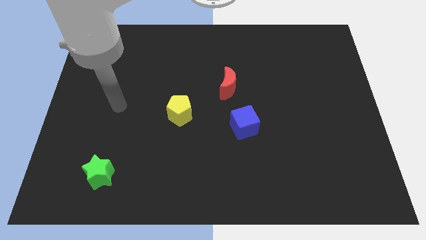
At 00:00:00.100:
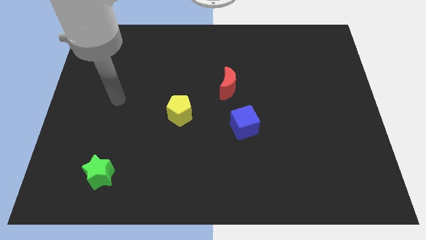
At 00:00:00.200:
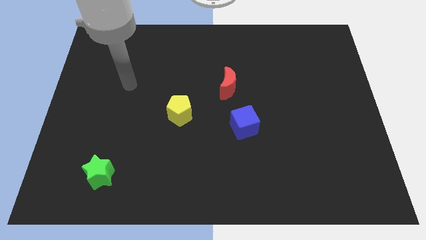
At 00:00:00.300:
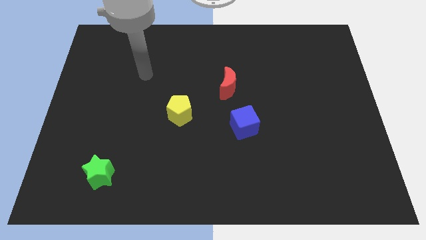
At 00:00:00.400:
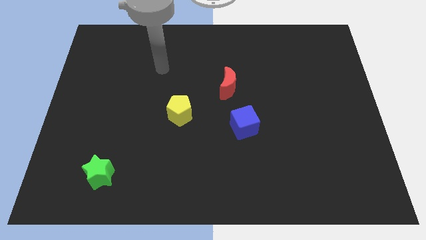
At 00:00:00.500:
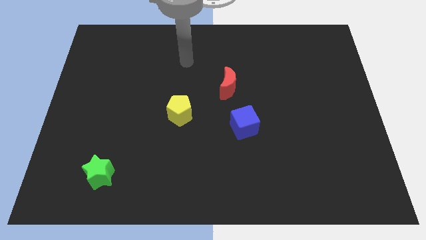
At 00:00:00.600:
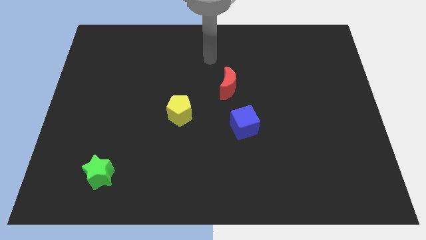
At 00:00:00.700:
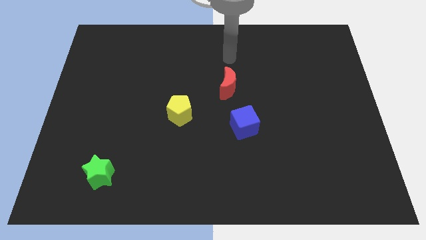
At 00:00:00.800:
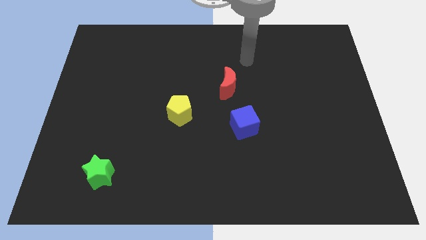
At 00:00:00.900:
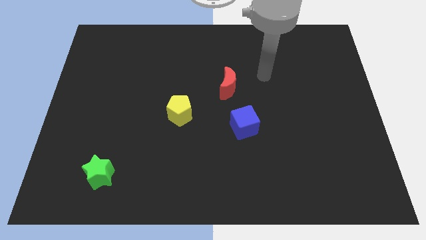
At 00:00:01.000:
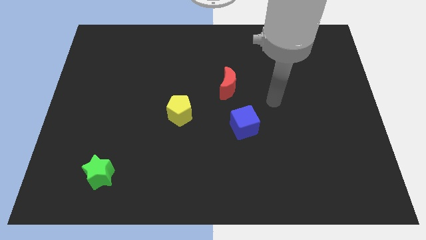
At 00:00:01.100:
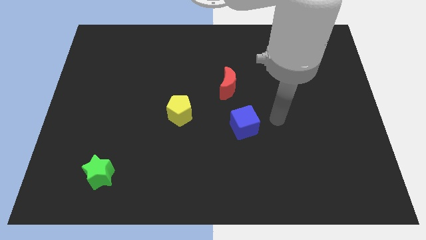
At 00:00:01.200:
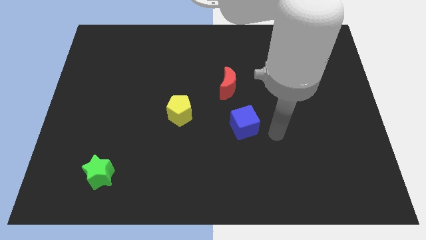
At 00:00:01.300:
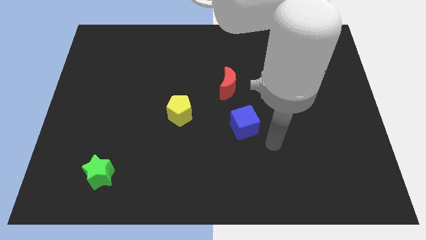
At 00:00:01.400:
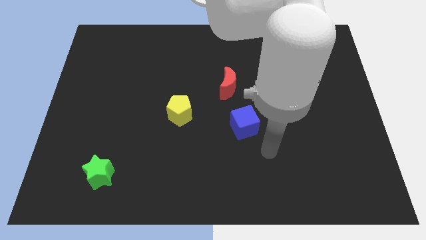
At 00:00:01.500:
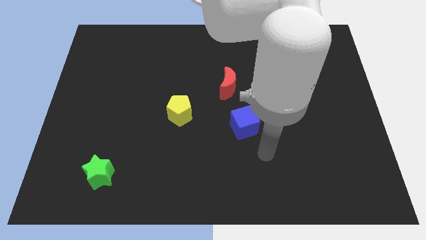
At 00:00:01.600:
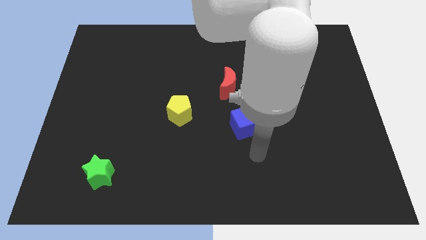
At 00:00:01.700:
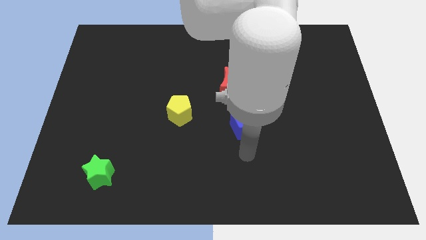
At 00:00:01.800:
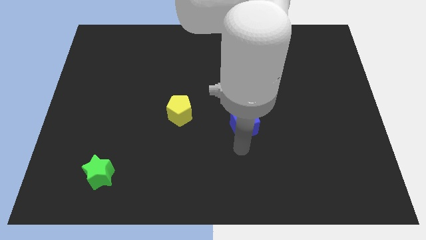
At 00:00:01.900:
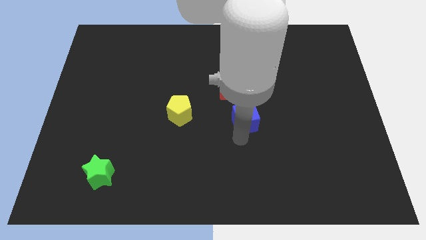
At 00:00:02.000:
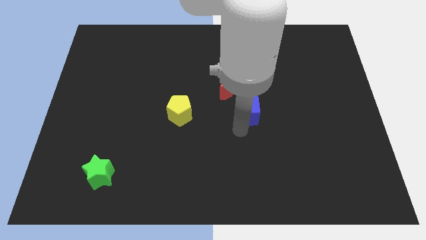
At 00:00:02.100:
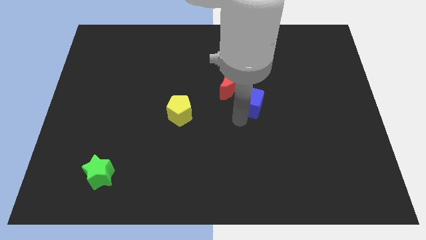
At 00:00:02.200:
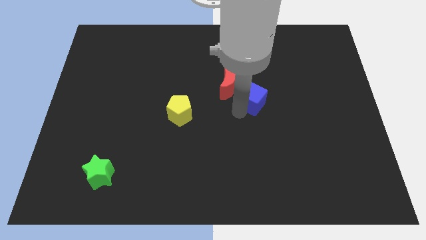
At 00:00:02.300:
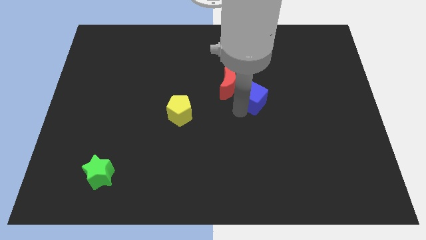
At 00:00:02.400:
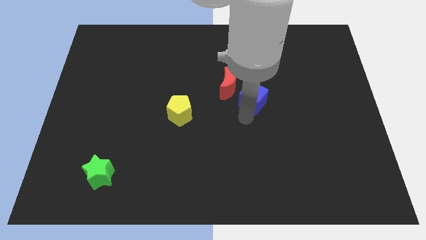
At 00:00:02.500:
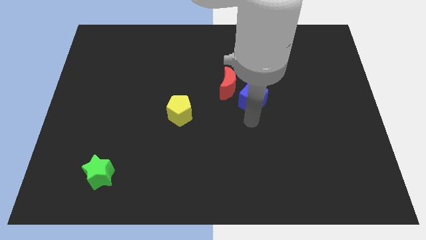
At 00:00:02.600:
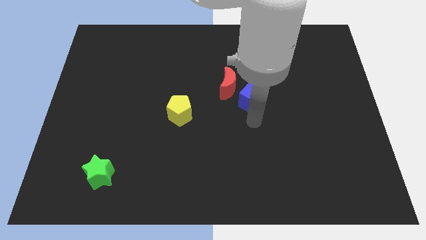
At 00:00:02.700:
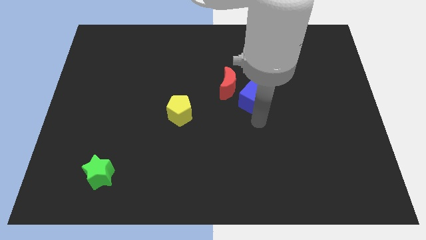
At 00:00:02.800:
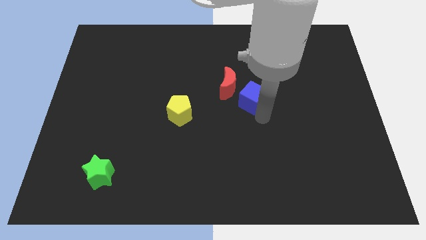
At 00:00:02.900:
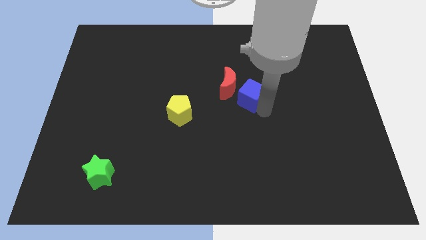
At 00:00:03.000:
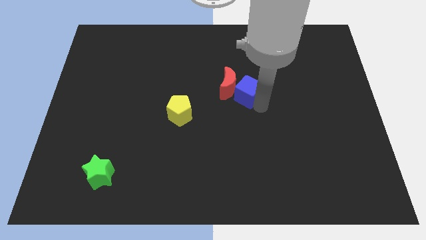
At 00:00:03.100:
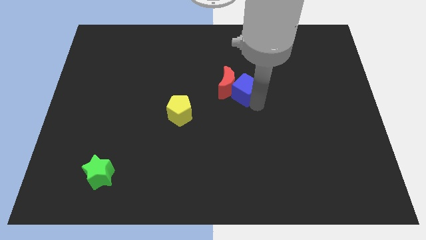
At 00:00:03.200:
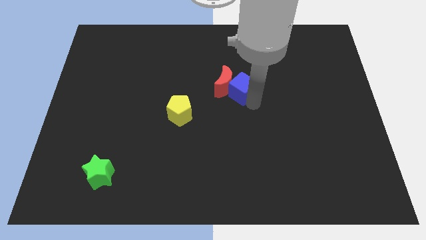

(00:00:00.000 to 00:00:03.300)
put the blue block close to the red block

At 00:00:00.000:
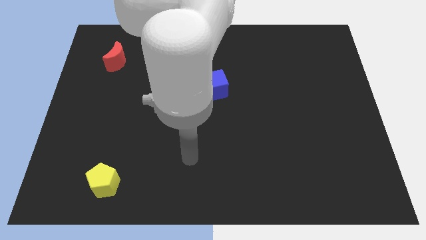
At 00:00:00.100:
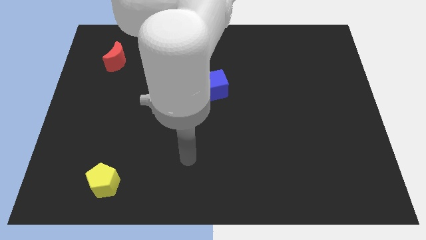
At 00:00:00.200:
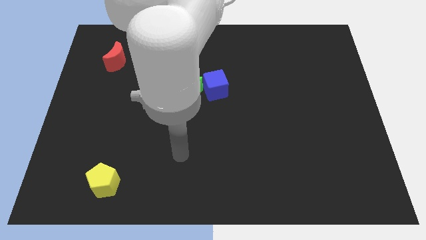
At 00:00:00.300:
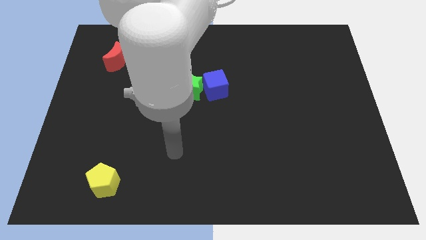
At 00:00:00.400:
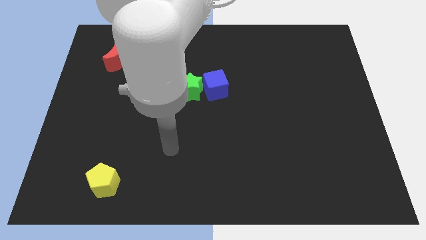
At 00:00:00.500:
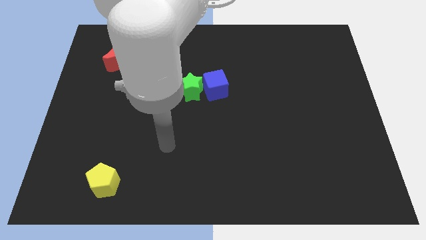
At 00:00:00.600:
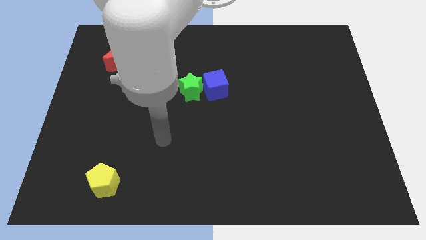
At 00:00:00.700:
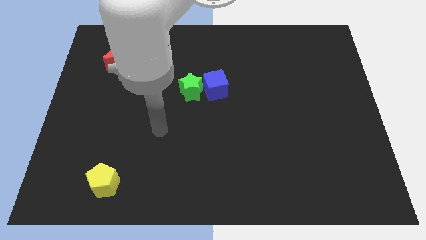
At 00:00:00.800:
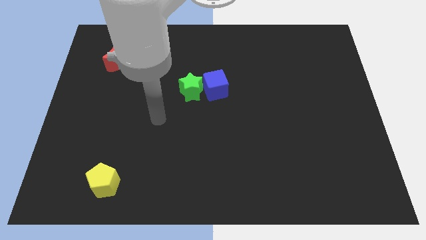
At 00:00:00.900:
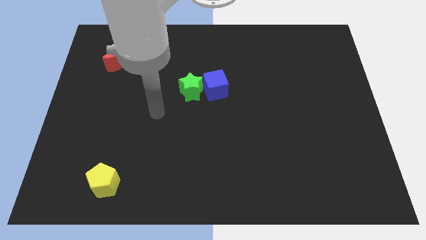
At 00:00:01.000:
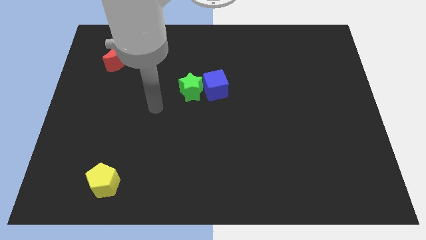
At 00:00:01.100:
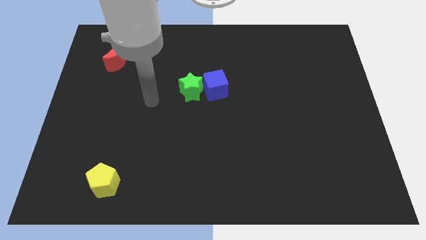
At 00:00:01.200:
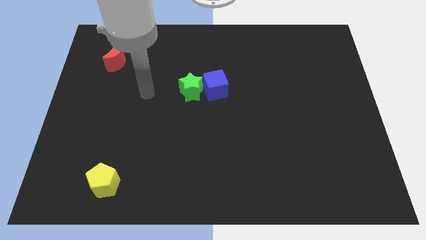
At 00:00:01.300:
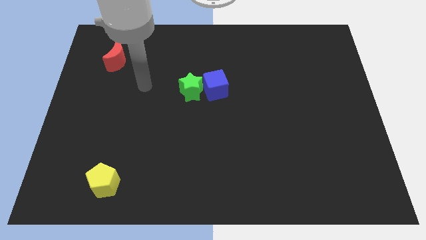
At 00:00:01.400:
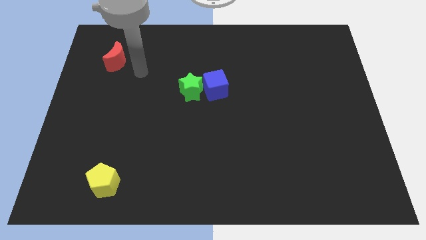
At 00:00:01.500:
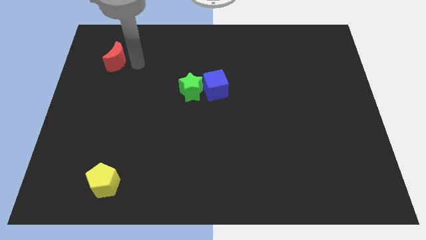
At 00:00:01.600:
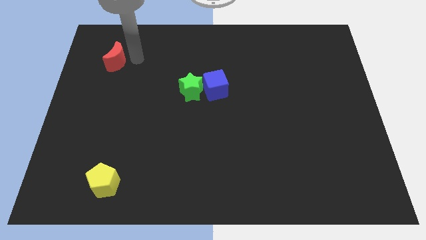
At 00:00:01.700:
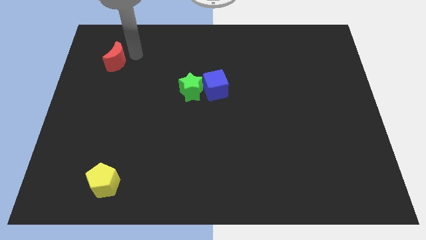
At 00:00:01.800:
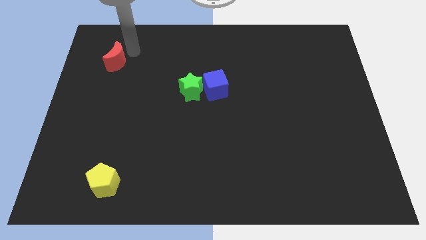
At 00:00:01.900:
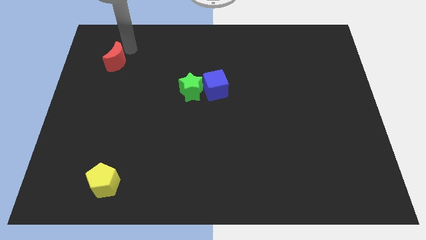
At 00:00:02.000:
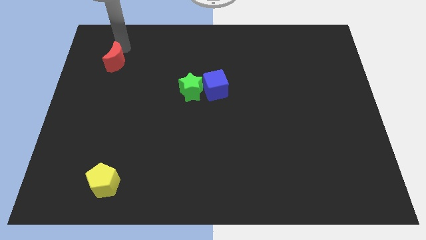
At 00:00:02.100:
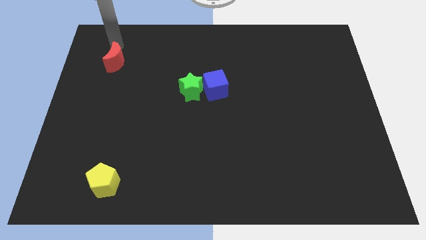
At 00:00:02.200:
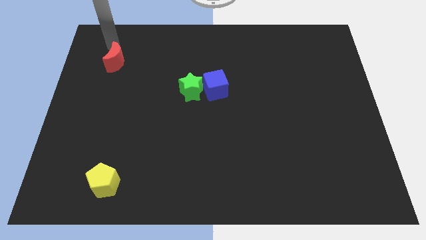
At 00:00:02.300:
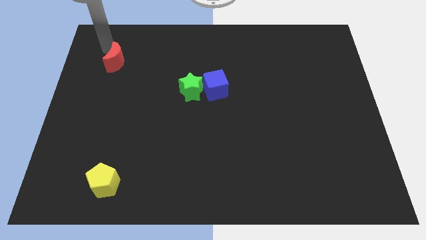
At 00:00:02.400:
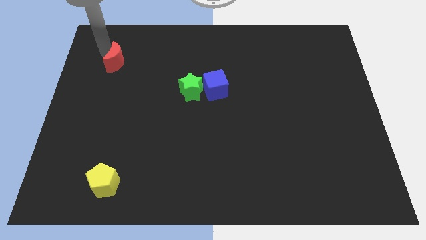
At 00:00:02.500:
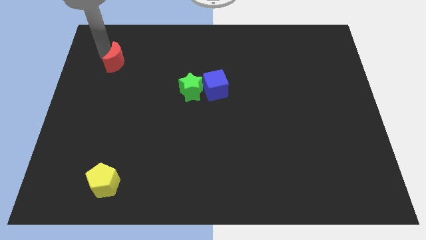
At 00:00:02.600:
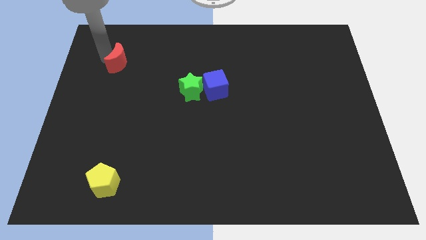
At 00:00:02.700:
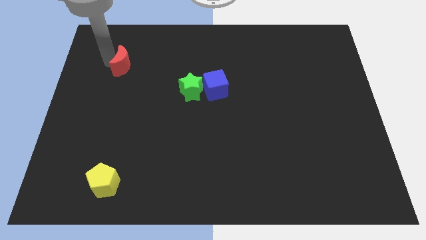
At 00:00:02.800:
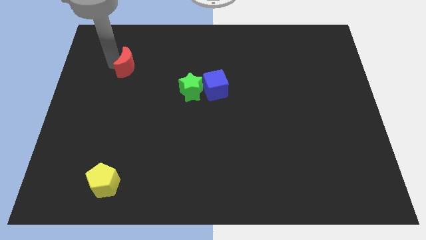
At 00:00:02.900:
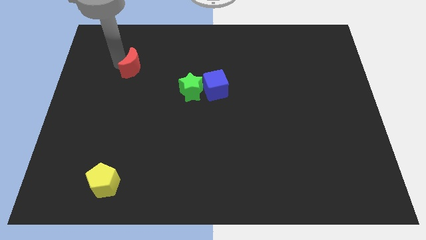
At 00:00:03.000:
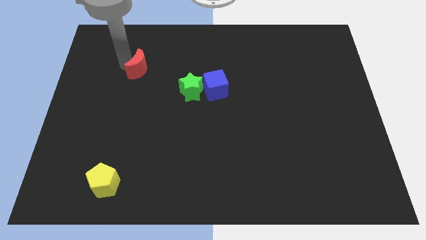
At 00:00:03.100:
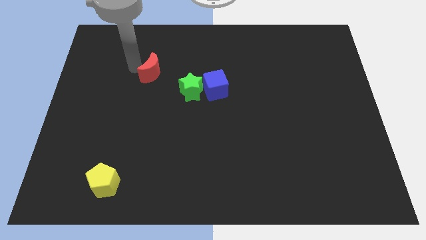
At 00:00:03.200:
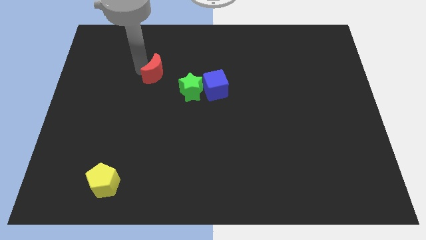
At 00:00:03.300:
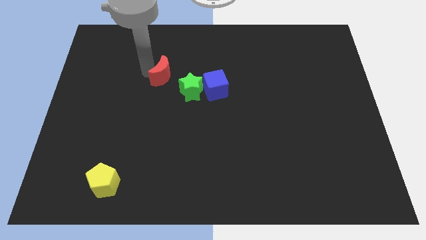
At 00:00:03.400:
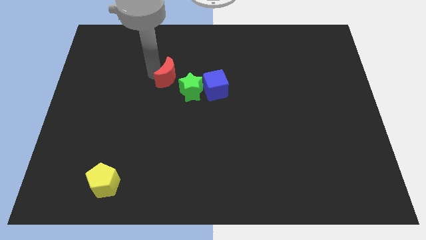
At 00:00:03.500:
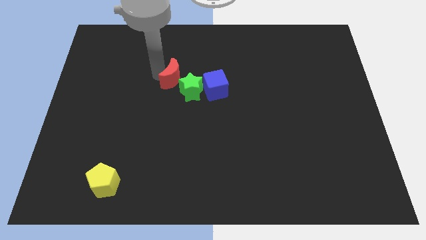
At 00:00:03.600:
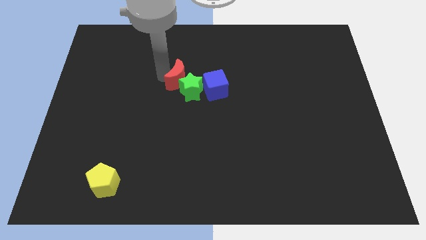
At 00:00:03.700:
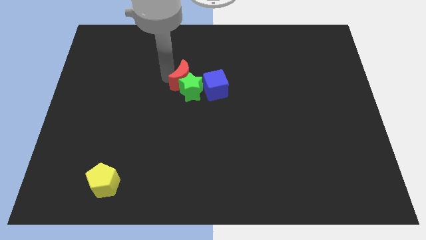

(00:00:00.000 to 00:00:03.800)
push the red moon close to the green star

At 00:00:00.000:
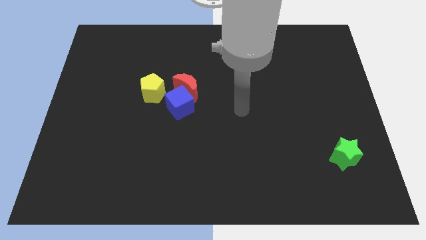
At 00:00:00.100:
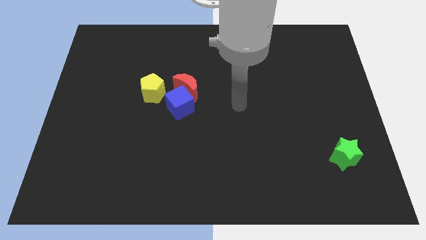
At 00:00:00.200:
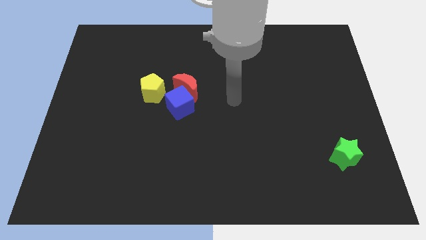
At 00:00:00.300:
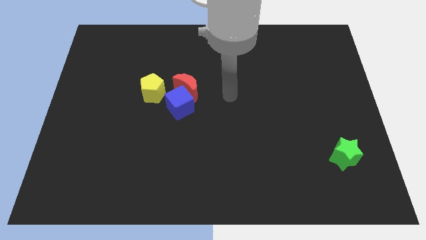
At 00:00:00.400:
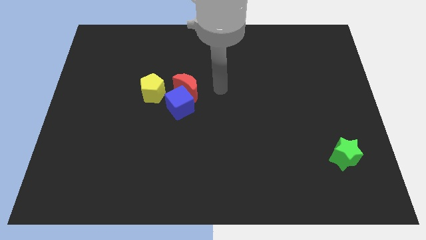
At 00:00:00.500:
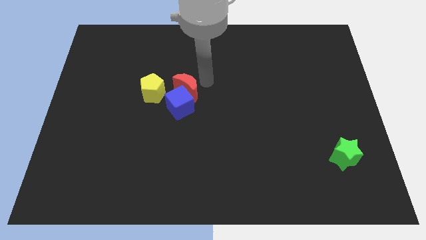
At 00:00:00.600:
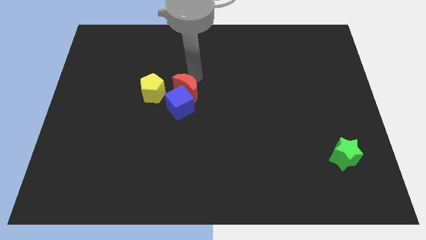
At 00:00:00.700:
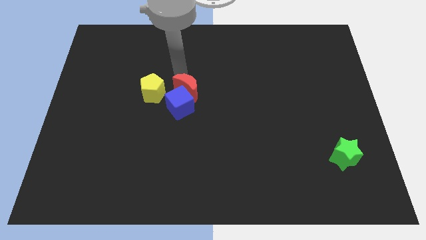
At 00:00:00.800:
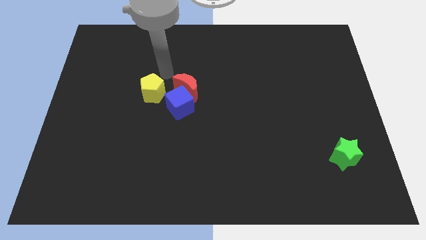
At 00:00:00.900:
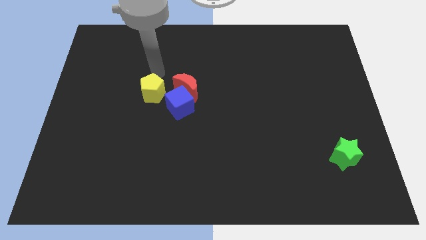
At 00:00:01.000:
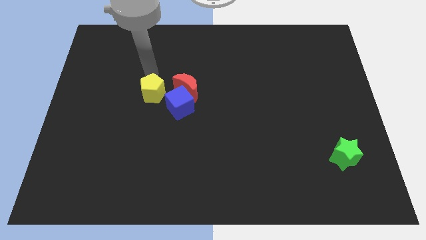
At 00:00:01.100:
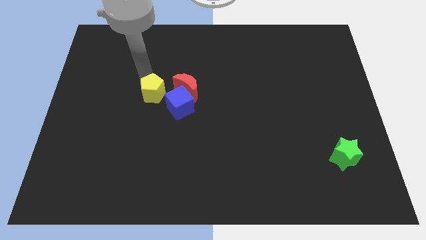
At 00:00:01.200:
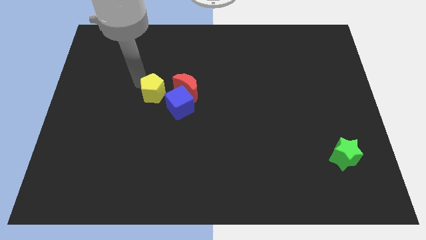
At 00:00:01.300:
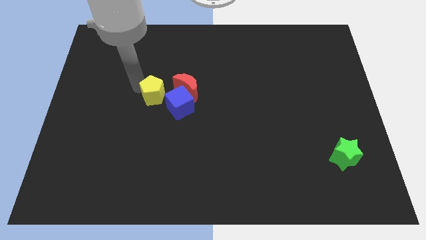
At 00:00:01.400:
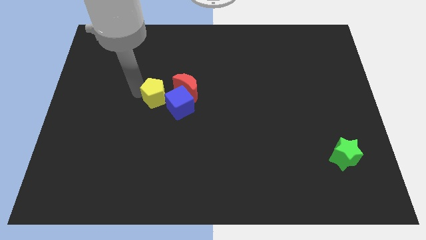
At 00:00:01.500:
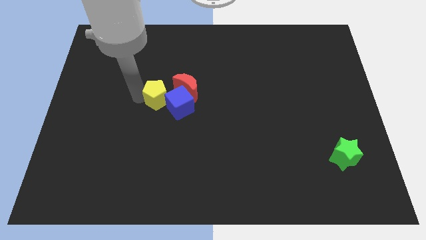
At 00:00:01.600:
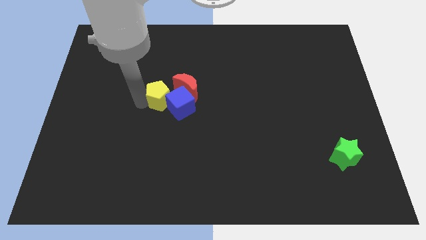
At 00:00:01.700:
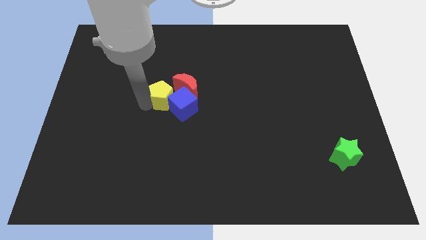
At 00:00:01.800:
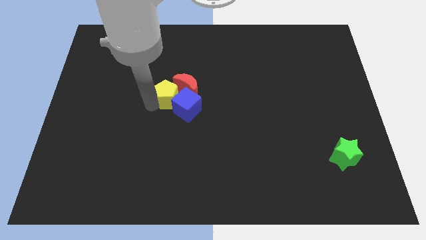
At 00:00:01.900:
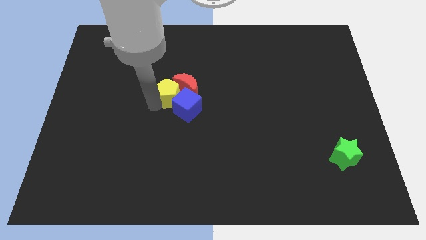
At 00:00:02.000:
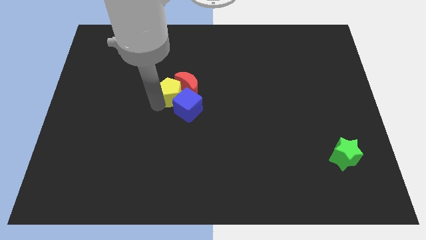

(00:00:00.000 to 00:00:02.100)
slide the yellow pentagon close to the red block
